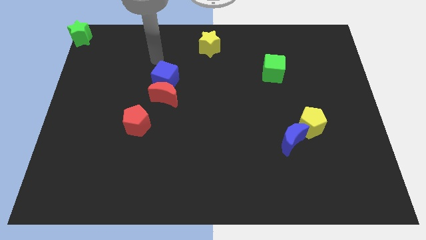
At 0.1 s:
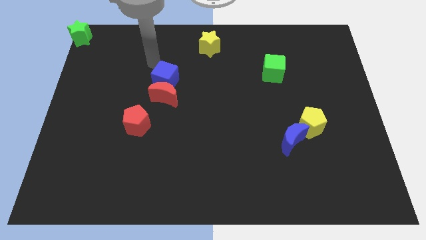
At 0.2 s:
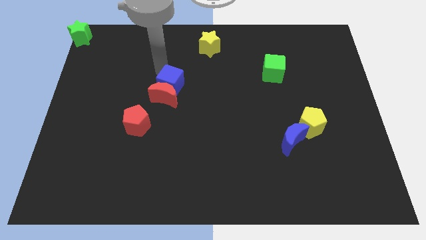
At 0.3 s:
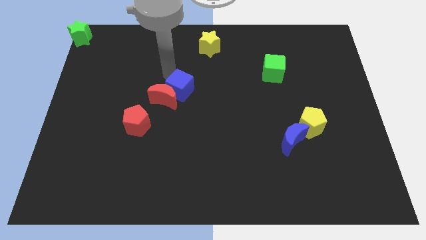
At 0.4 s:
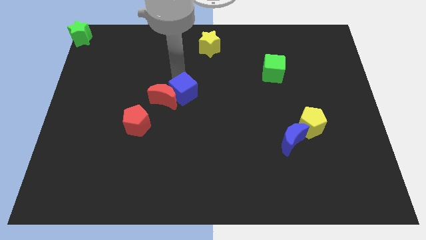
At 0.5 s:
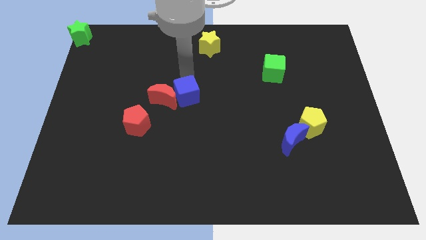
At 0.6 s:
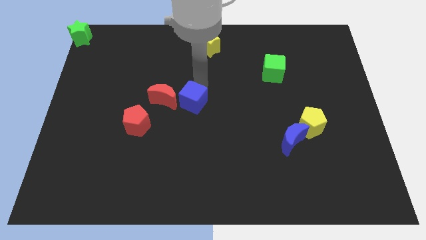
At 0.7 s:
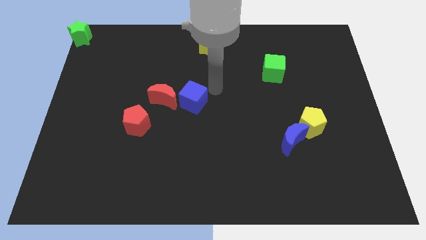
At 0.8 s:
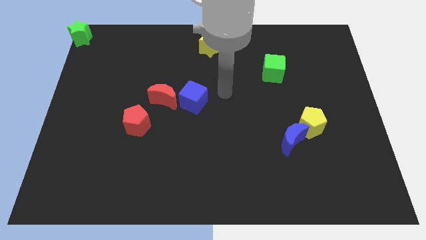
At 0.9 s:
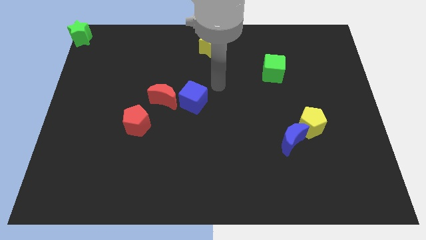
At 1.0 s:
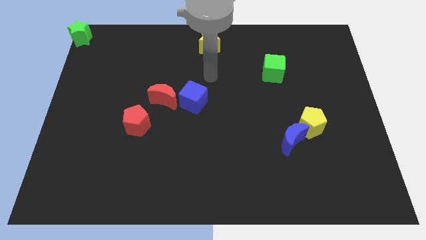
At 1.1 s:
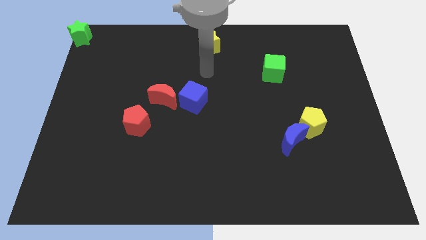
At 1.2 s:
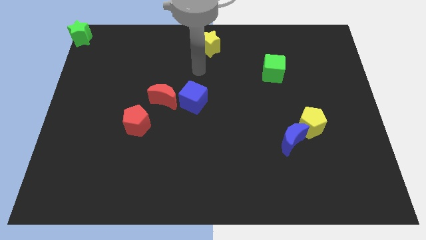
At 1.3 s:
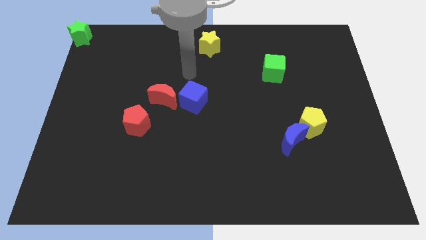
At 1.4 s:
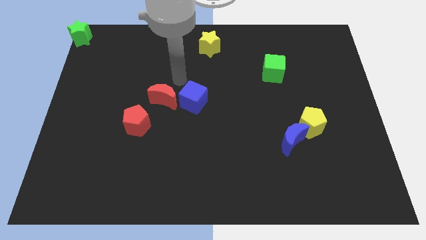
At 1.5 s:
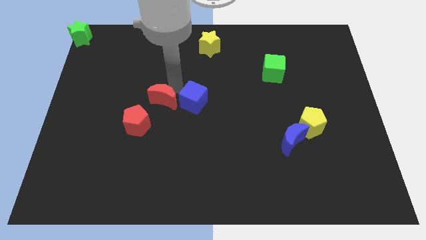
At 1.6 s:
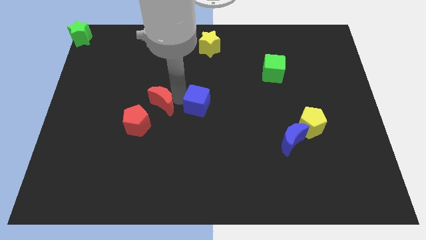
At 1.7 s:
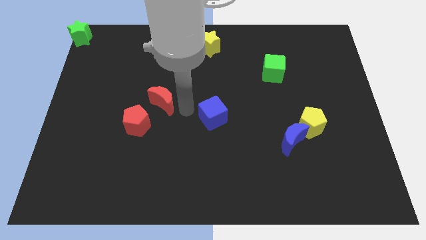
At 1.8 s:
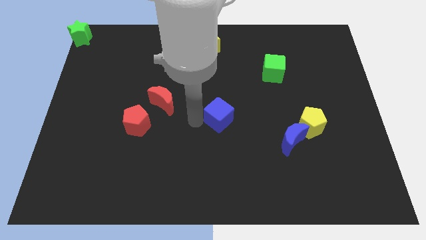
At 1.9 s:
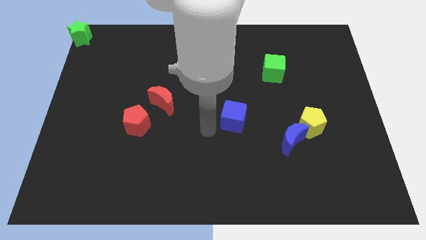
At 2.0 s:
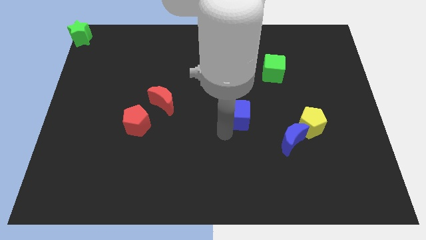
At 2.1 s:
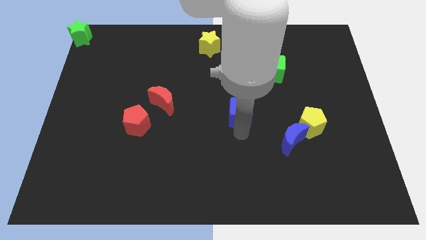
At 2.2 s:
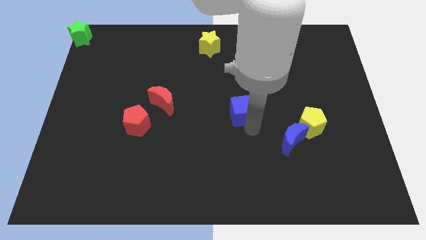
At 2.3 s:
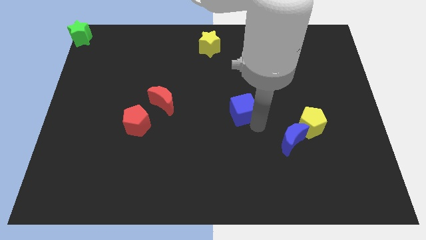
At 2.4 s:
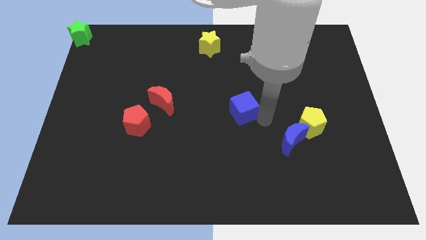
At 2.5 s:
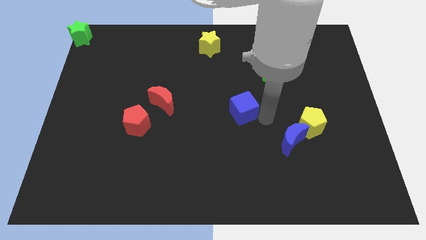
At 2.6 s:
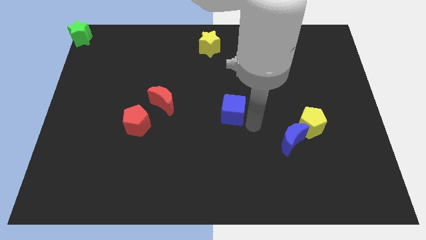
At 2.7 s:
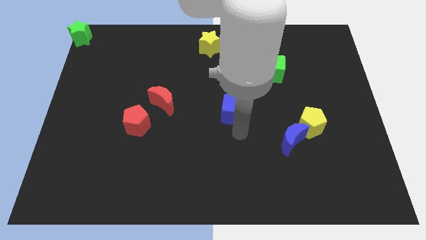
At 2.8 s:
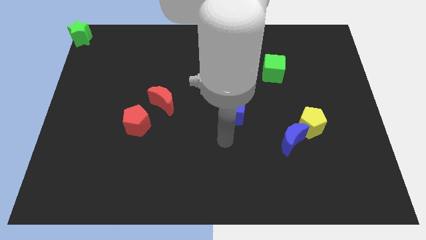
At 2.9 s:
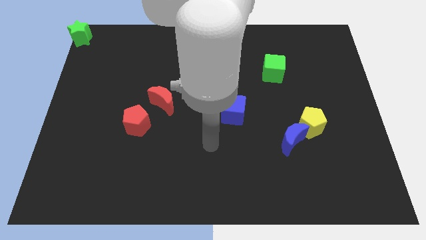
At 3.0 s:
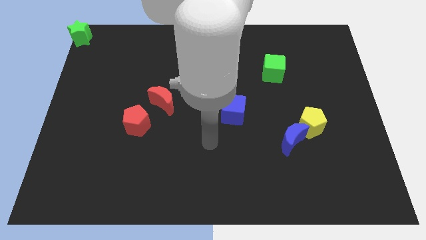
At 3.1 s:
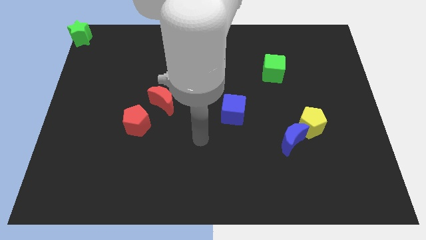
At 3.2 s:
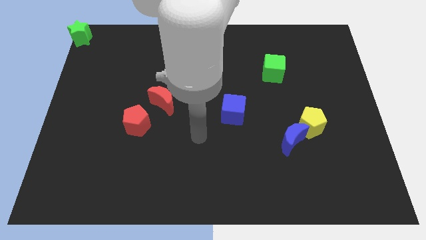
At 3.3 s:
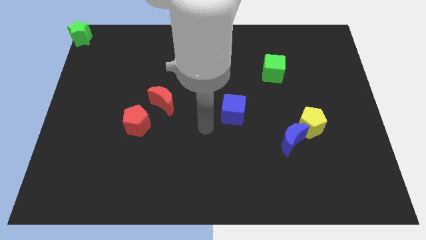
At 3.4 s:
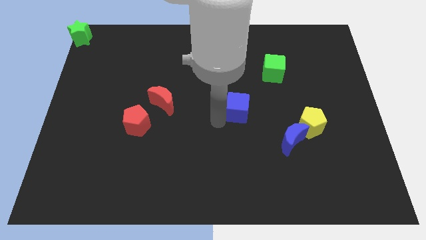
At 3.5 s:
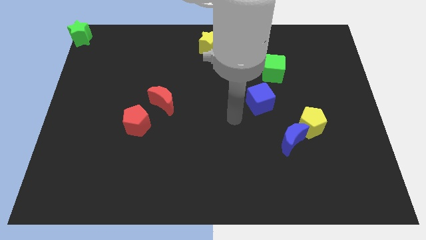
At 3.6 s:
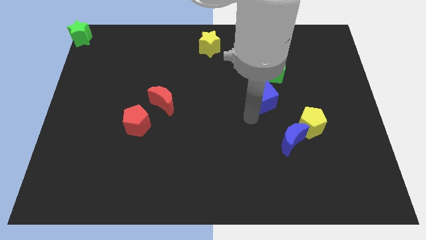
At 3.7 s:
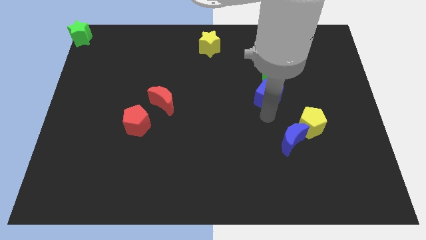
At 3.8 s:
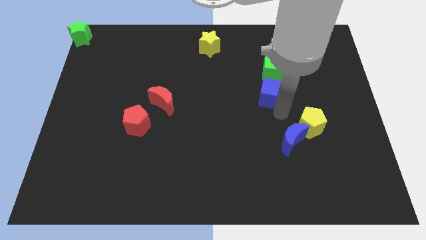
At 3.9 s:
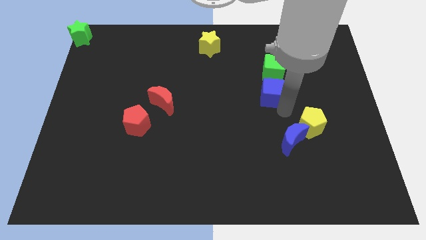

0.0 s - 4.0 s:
separate the red moon and the blue cube

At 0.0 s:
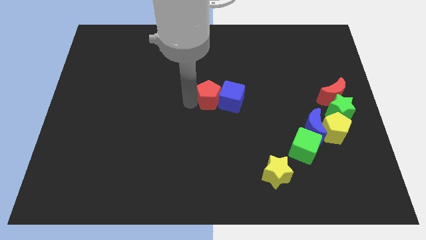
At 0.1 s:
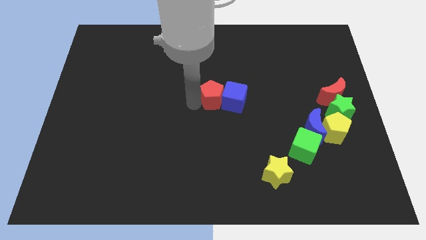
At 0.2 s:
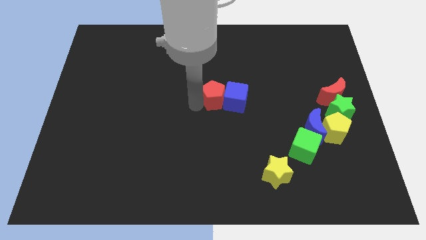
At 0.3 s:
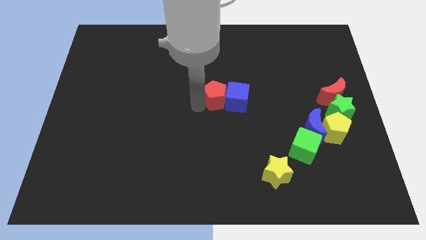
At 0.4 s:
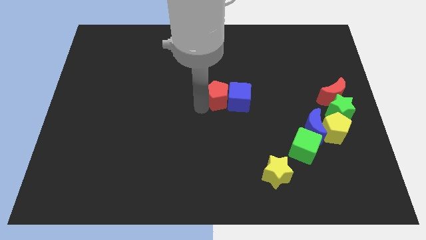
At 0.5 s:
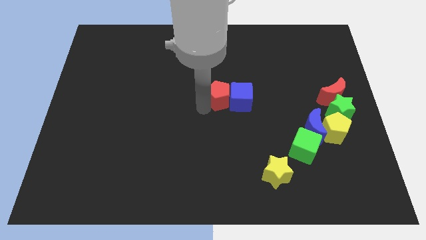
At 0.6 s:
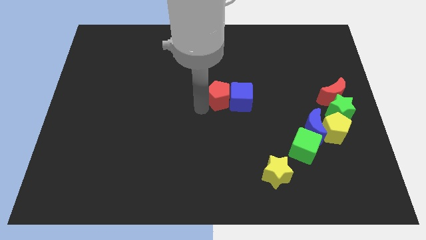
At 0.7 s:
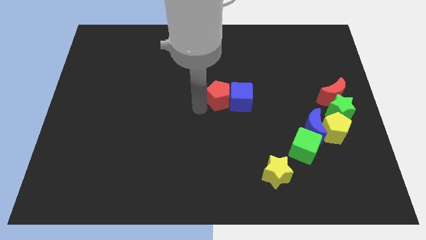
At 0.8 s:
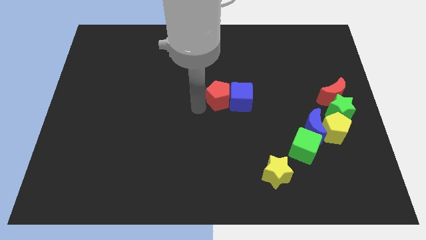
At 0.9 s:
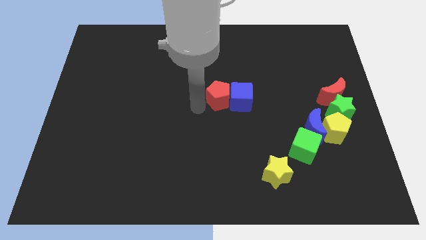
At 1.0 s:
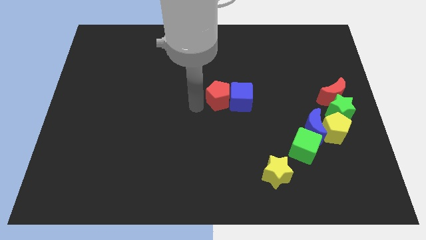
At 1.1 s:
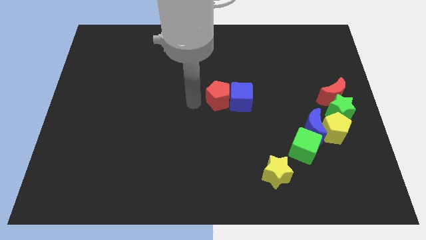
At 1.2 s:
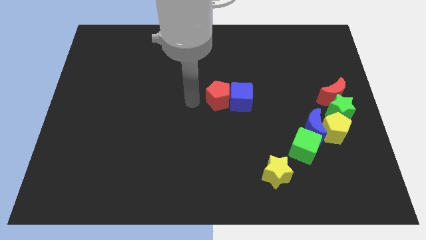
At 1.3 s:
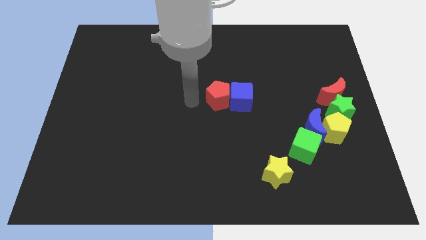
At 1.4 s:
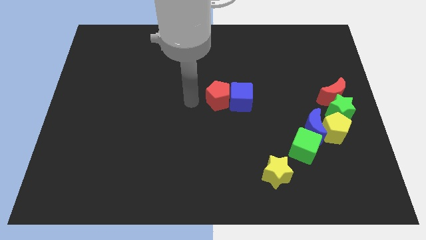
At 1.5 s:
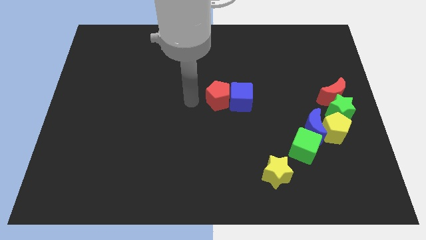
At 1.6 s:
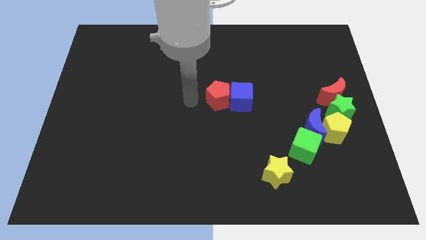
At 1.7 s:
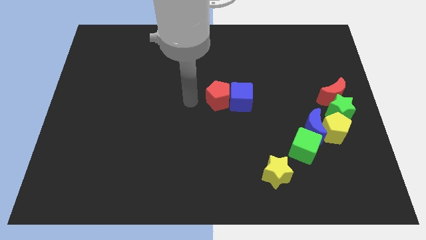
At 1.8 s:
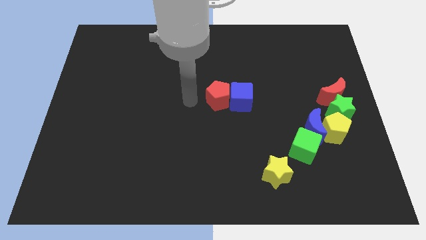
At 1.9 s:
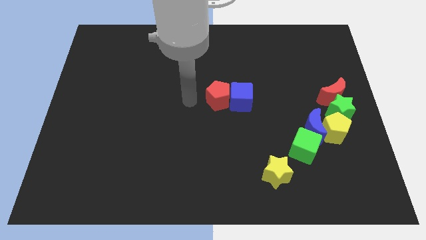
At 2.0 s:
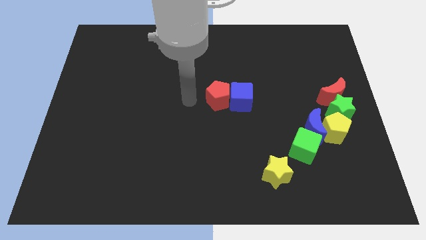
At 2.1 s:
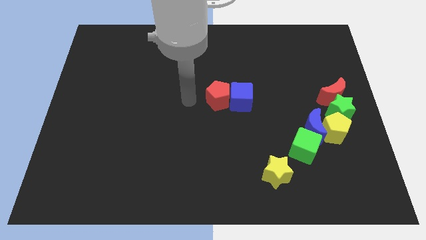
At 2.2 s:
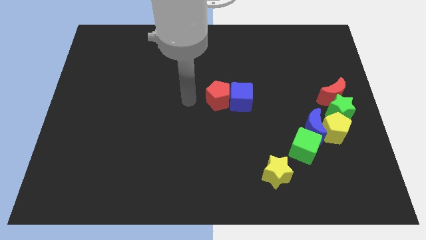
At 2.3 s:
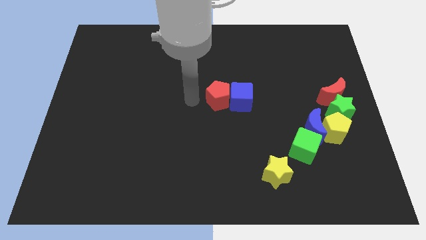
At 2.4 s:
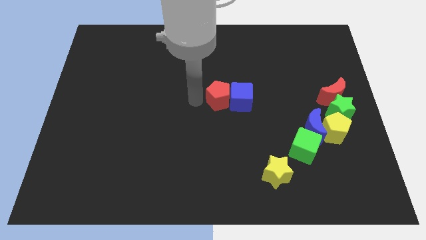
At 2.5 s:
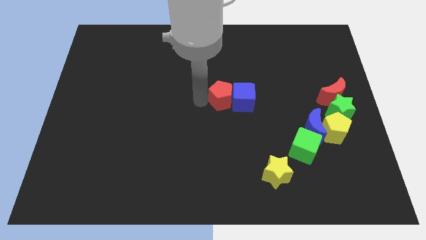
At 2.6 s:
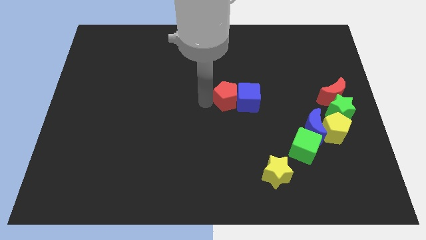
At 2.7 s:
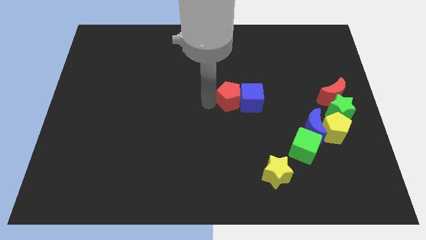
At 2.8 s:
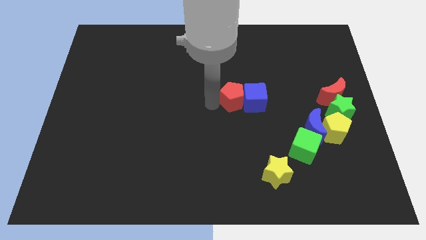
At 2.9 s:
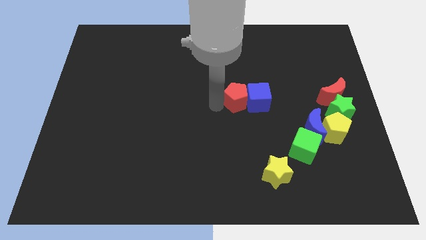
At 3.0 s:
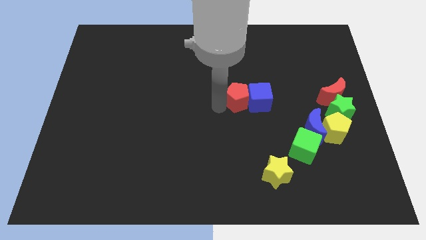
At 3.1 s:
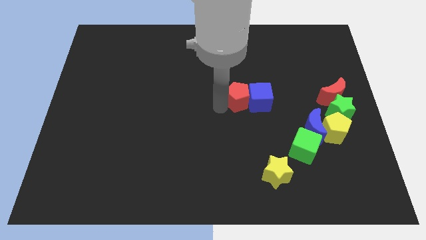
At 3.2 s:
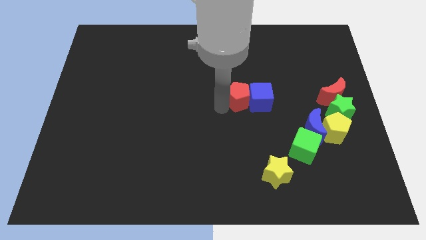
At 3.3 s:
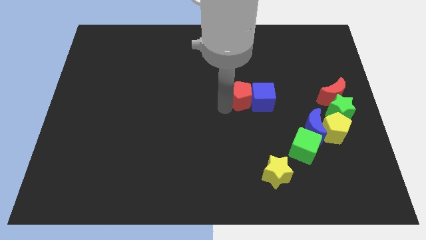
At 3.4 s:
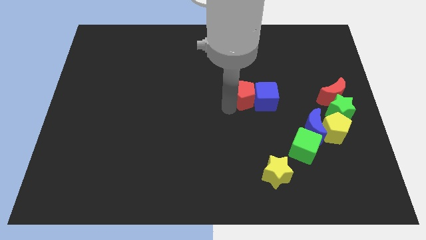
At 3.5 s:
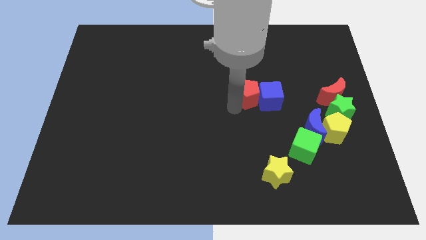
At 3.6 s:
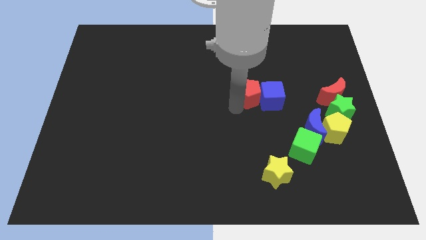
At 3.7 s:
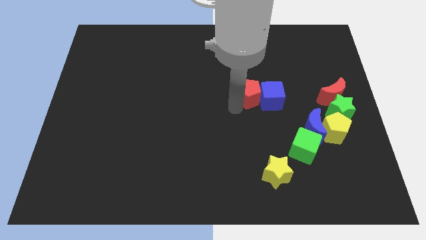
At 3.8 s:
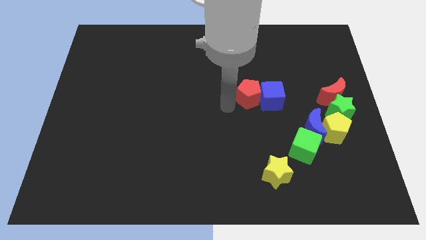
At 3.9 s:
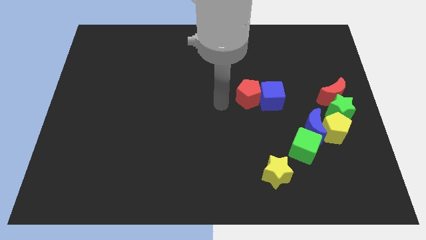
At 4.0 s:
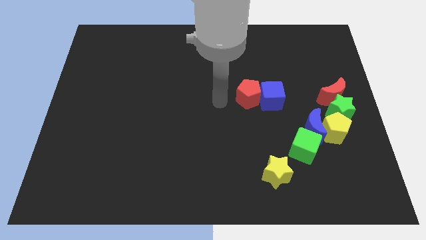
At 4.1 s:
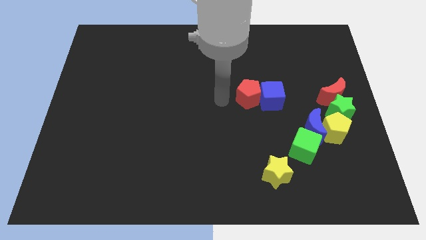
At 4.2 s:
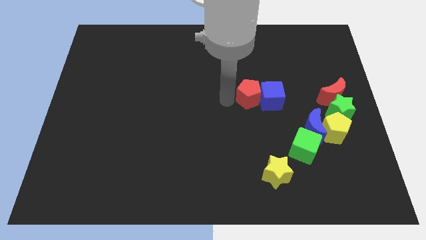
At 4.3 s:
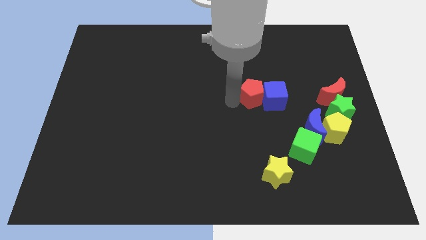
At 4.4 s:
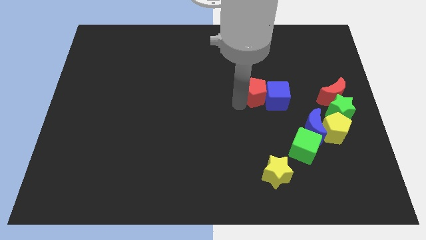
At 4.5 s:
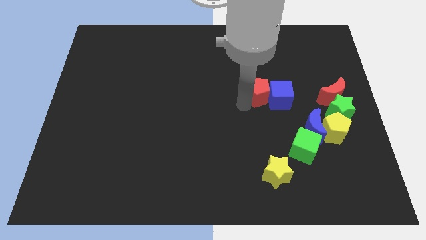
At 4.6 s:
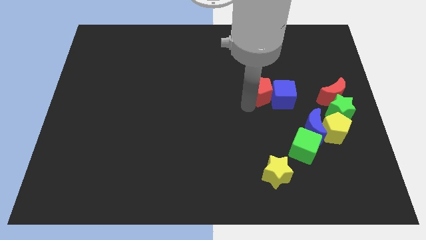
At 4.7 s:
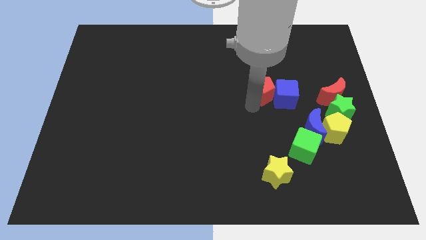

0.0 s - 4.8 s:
push red pentagon towards center right
